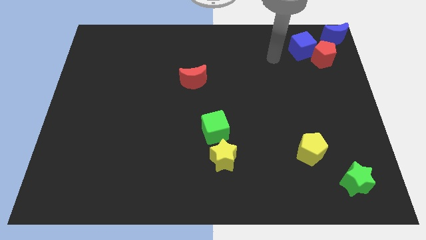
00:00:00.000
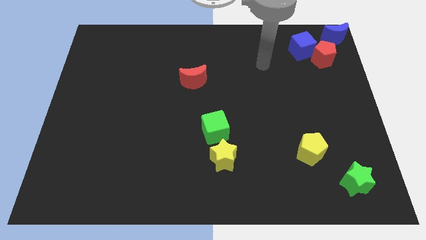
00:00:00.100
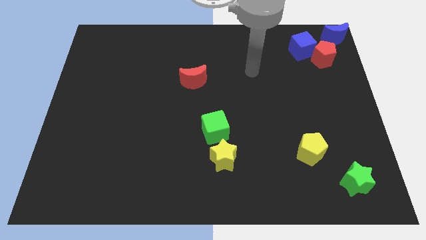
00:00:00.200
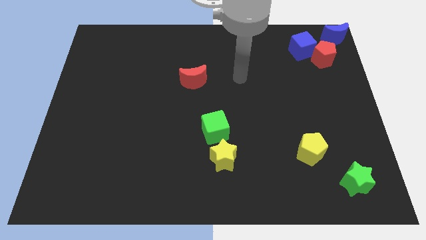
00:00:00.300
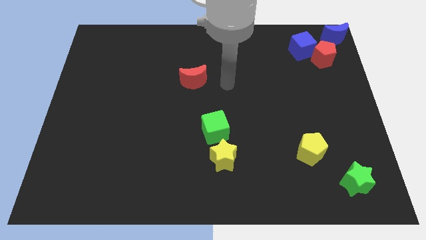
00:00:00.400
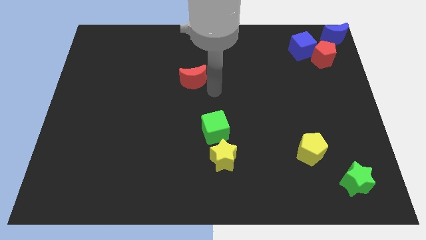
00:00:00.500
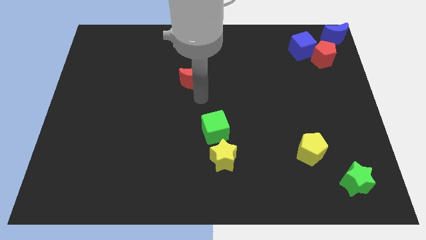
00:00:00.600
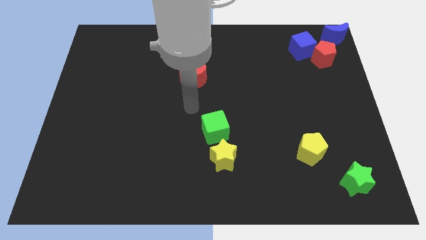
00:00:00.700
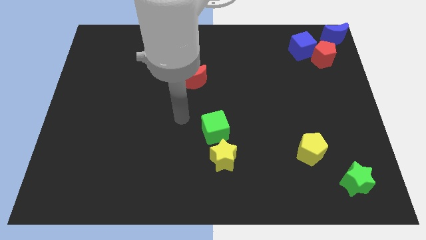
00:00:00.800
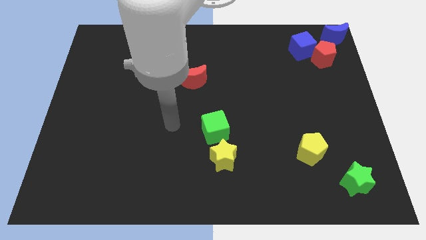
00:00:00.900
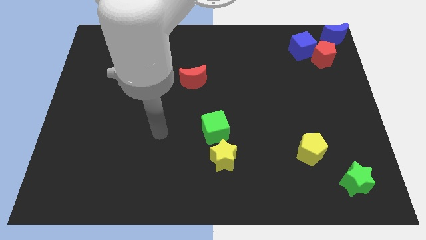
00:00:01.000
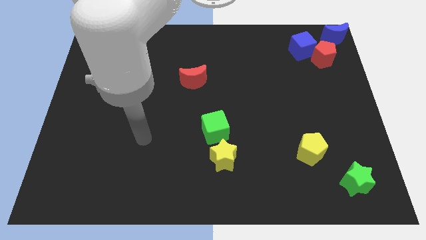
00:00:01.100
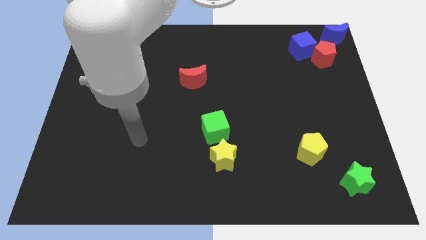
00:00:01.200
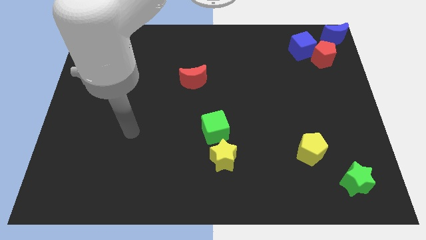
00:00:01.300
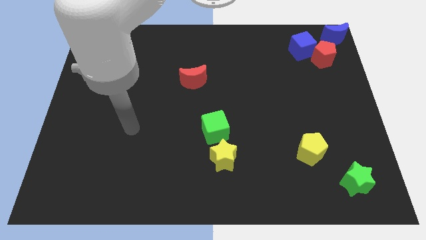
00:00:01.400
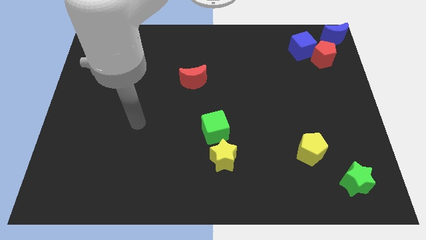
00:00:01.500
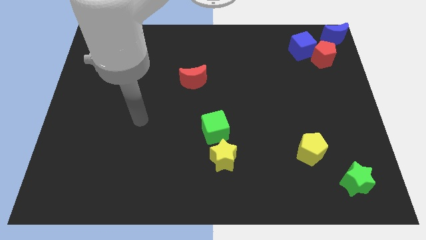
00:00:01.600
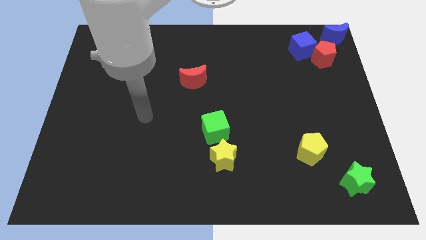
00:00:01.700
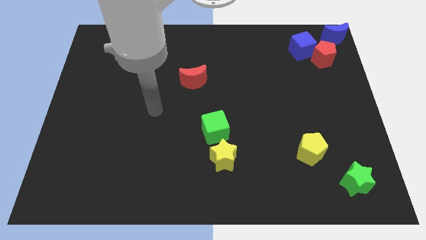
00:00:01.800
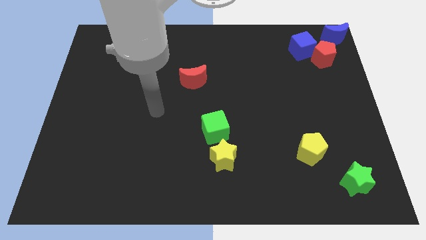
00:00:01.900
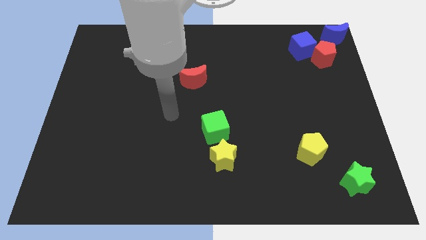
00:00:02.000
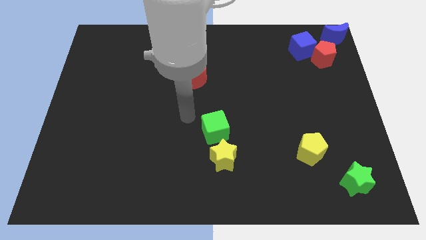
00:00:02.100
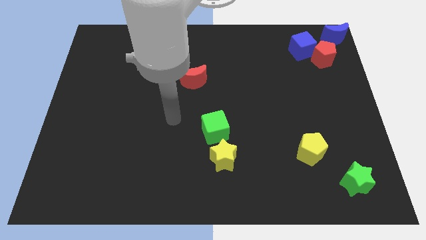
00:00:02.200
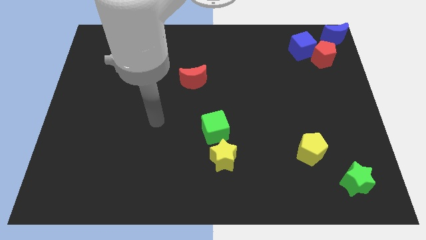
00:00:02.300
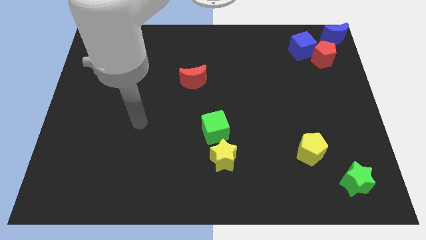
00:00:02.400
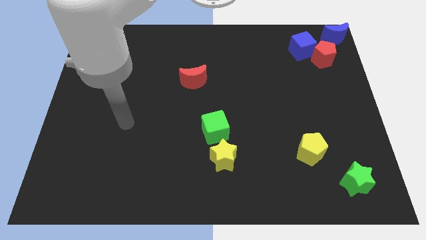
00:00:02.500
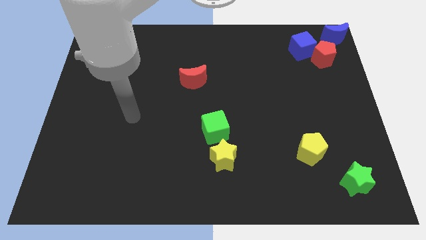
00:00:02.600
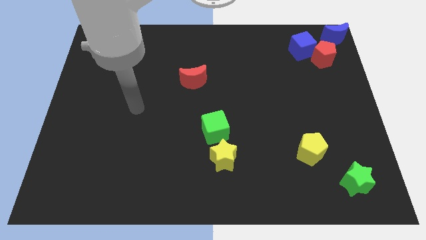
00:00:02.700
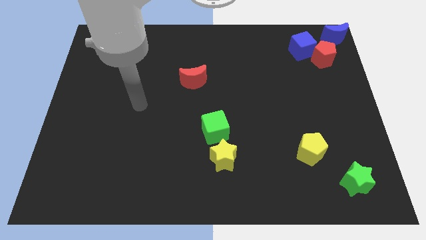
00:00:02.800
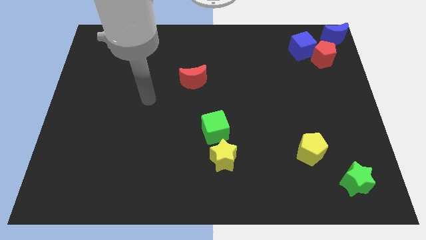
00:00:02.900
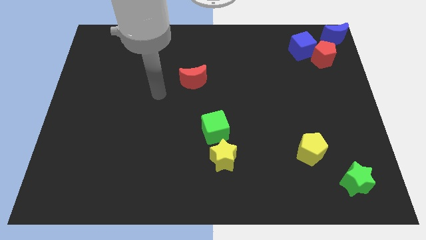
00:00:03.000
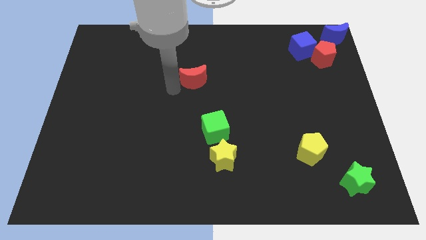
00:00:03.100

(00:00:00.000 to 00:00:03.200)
move your arm towards the red crescent

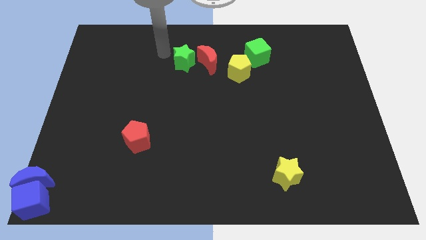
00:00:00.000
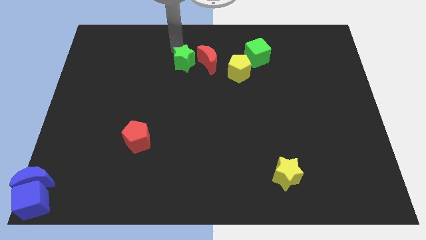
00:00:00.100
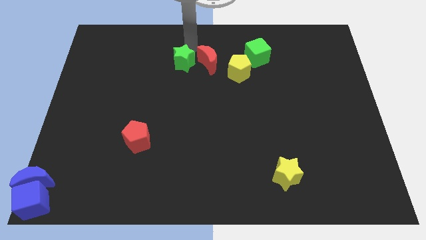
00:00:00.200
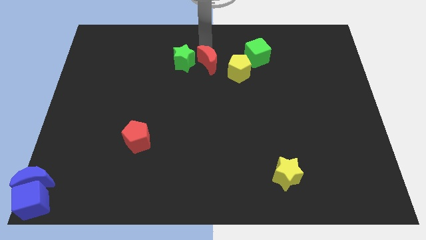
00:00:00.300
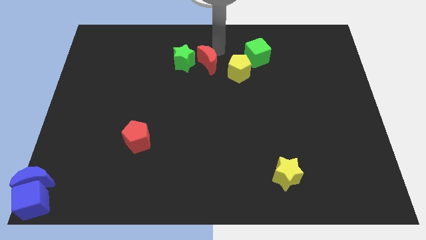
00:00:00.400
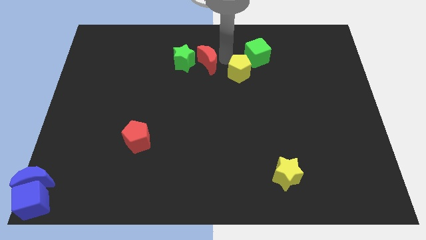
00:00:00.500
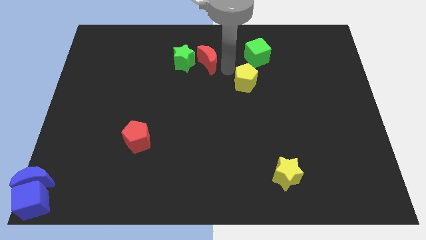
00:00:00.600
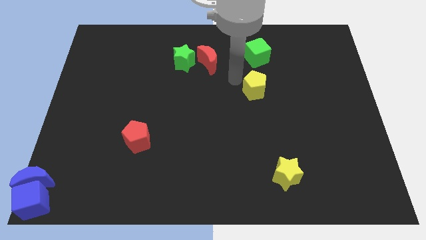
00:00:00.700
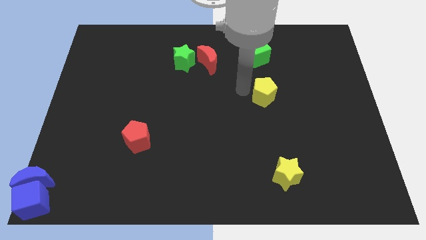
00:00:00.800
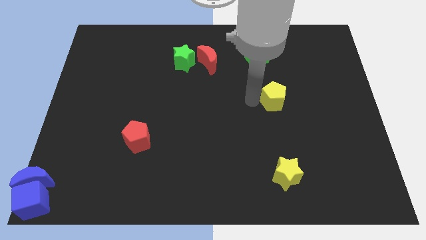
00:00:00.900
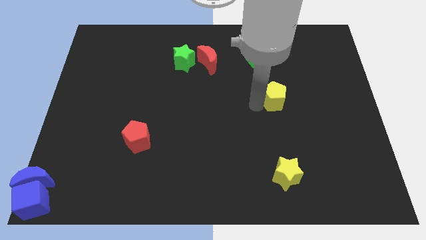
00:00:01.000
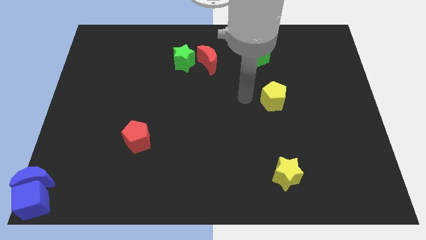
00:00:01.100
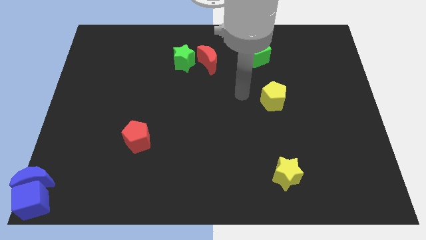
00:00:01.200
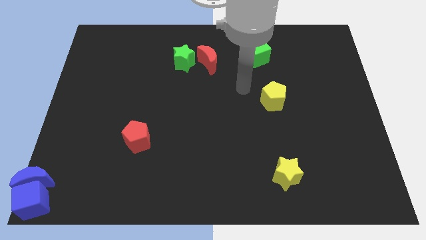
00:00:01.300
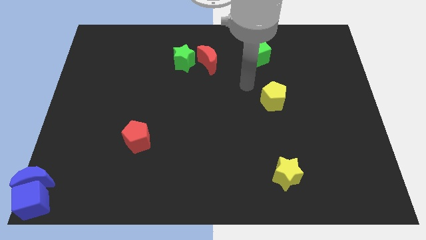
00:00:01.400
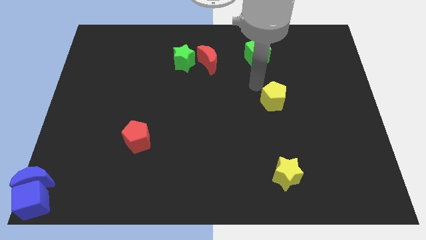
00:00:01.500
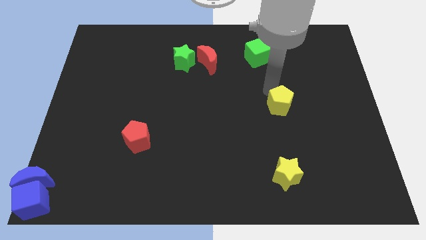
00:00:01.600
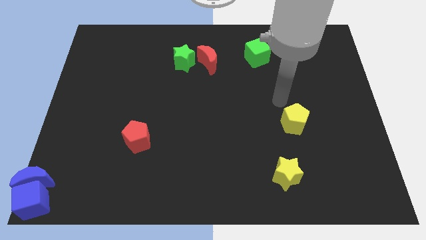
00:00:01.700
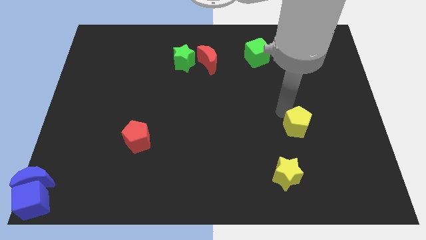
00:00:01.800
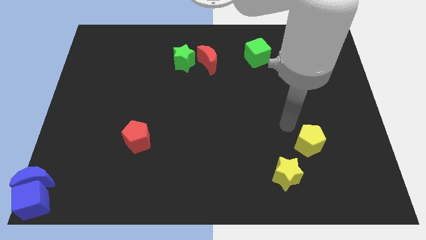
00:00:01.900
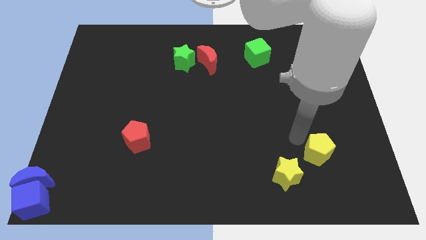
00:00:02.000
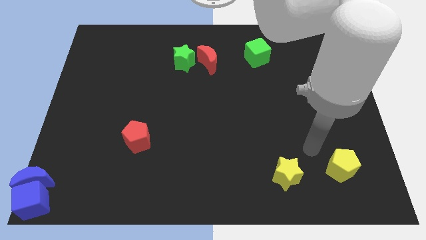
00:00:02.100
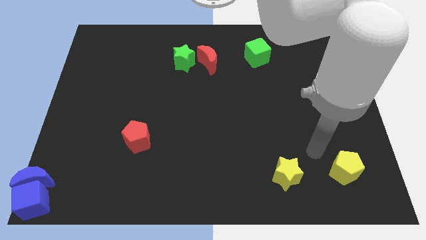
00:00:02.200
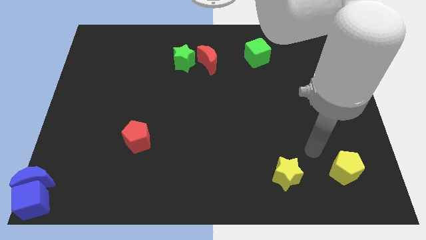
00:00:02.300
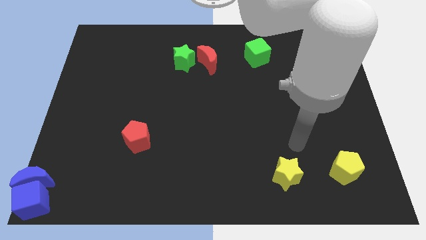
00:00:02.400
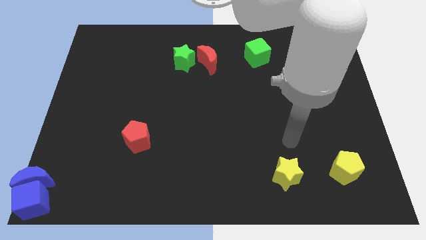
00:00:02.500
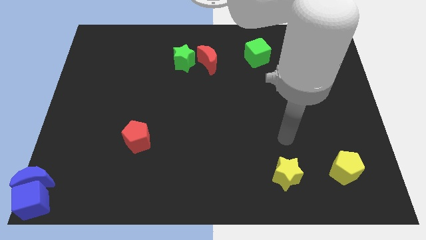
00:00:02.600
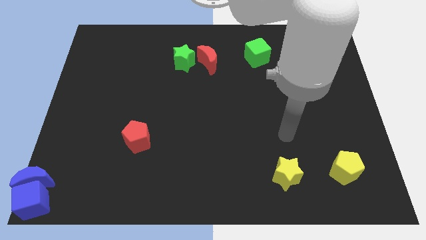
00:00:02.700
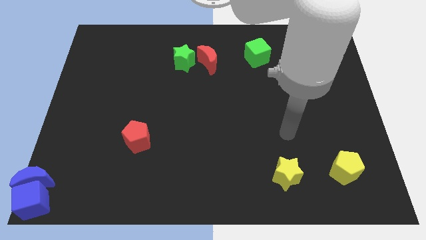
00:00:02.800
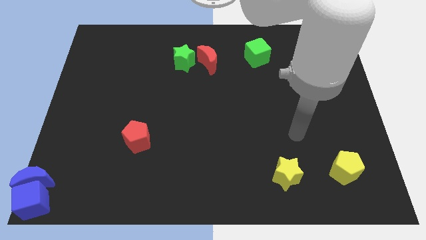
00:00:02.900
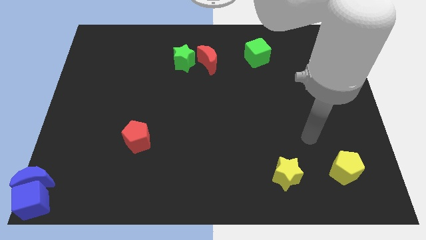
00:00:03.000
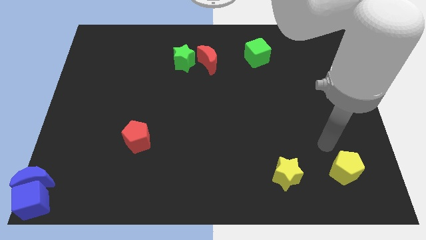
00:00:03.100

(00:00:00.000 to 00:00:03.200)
move the yellow pentagon to the bottom right corner of the board

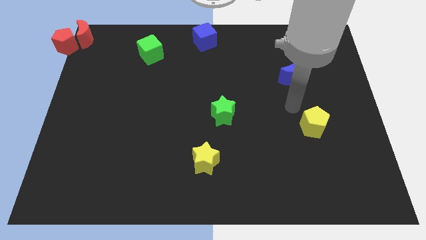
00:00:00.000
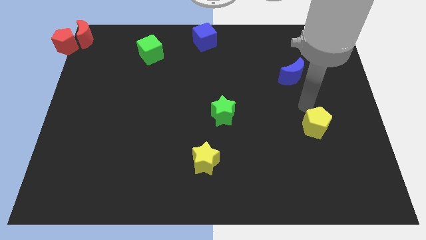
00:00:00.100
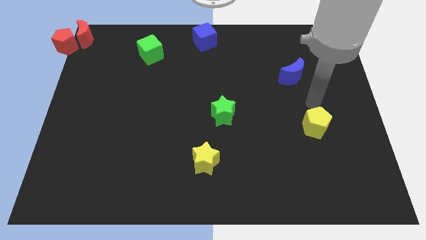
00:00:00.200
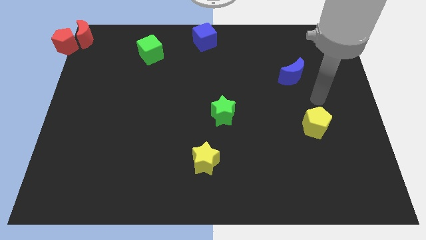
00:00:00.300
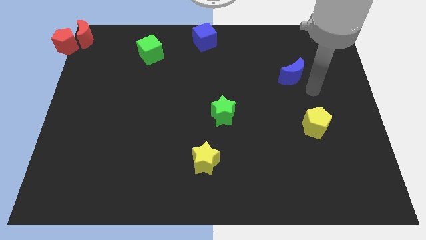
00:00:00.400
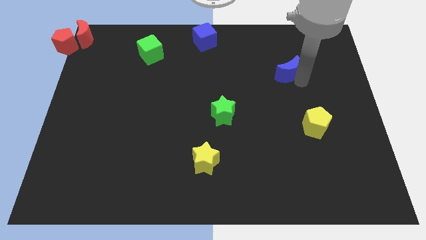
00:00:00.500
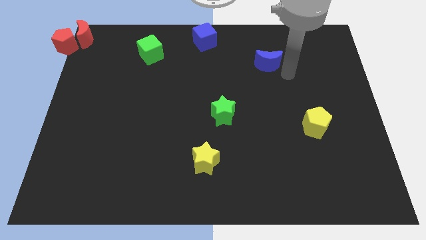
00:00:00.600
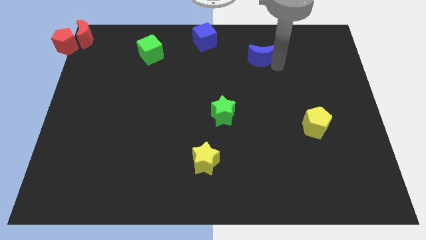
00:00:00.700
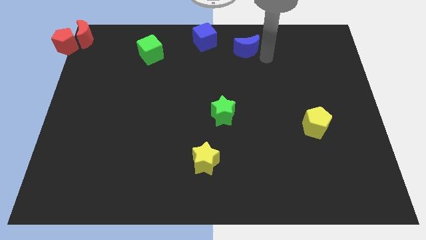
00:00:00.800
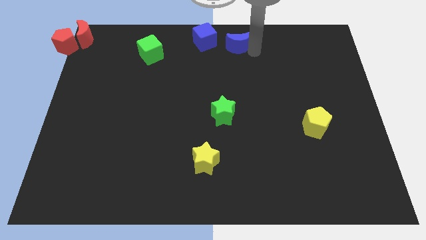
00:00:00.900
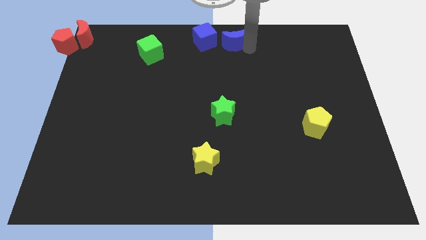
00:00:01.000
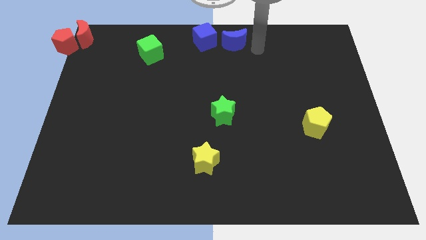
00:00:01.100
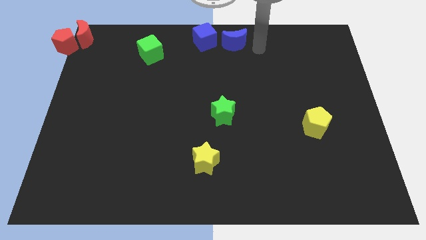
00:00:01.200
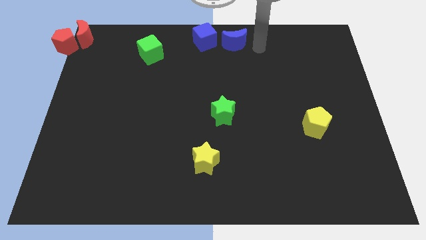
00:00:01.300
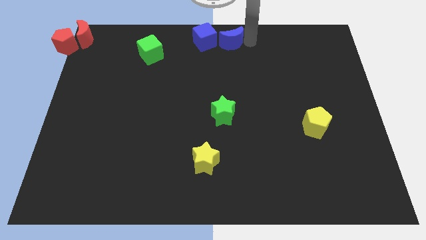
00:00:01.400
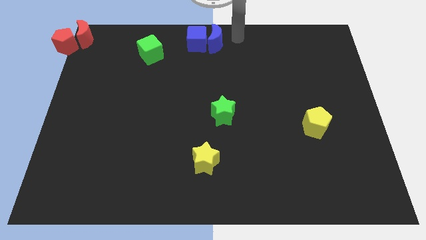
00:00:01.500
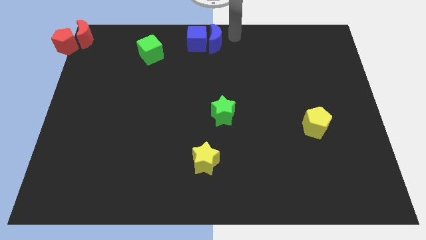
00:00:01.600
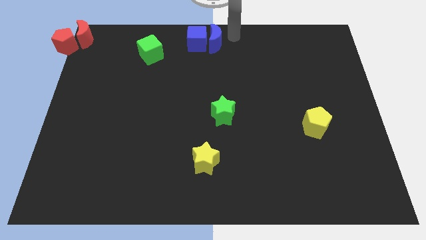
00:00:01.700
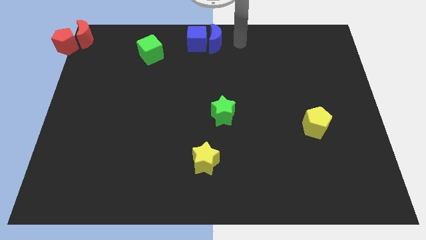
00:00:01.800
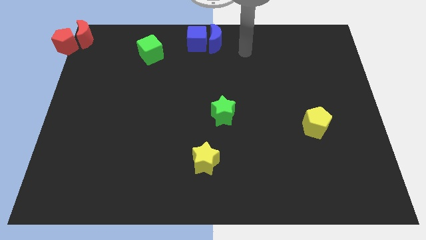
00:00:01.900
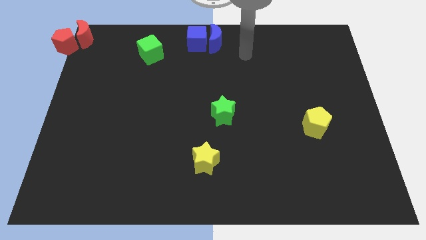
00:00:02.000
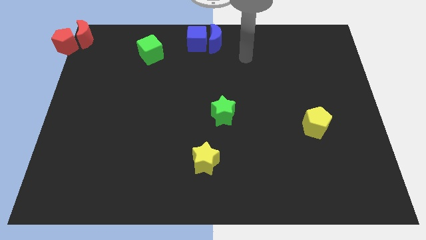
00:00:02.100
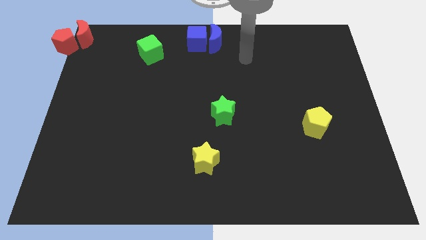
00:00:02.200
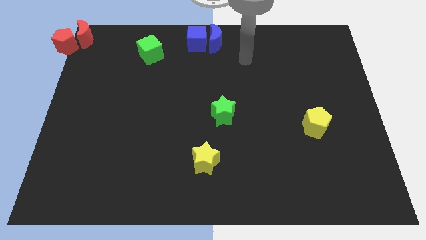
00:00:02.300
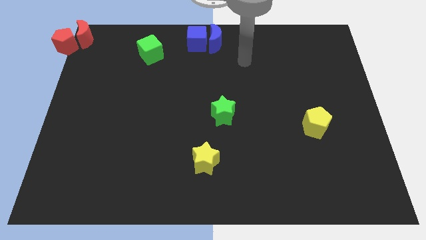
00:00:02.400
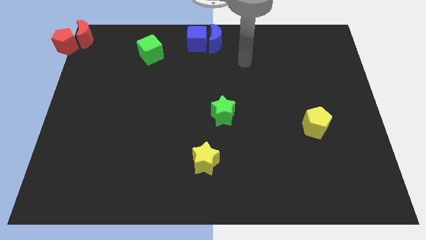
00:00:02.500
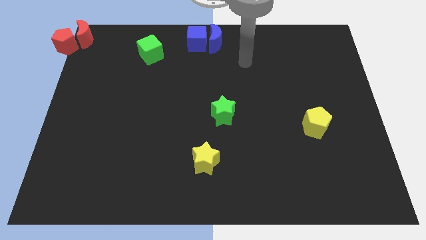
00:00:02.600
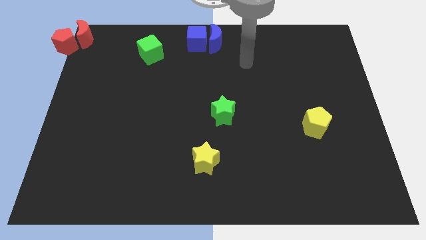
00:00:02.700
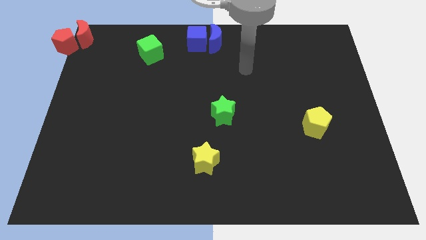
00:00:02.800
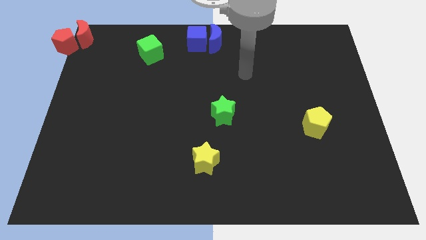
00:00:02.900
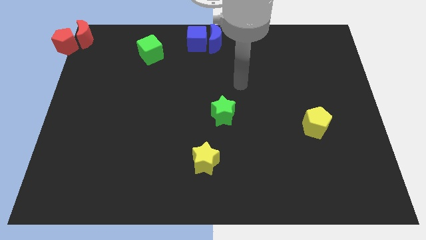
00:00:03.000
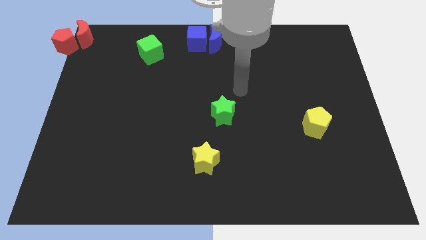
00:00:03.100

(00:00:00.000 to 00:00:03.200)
put the blue crescent at the top center of the board
